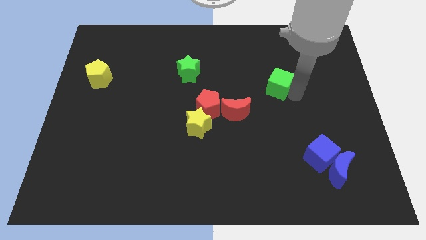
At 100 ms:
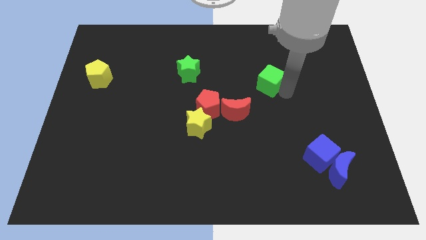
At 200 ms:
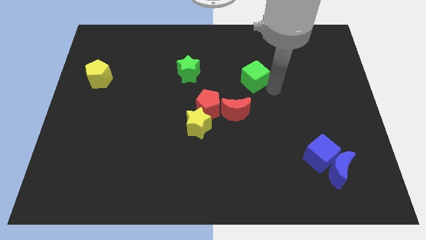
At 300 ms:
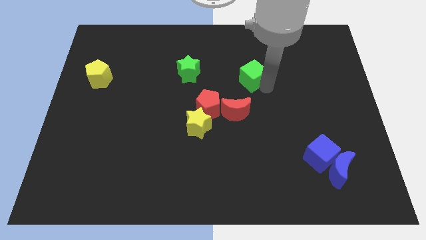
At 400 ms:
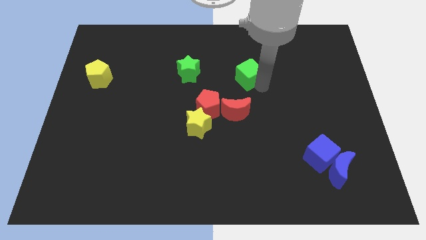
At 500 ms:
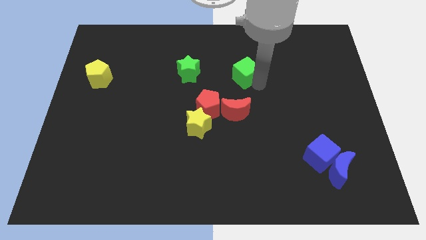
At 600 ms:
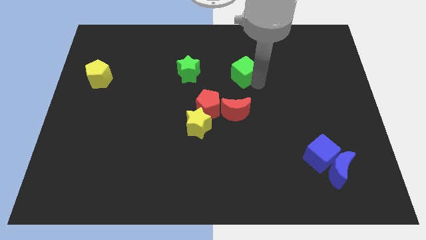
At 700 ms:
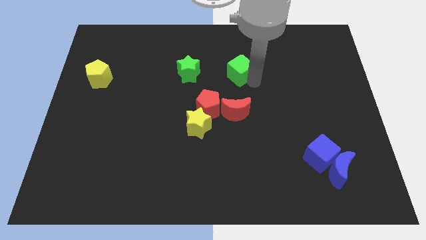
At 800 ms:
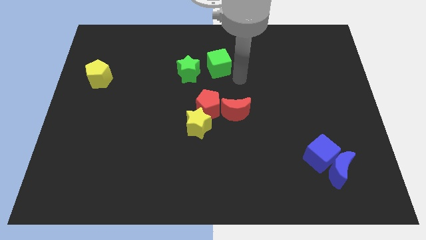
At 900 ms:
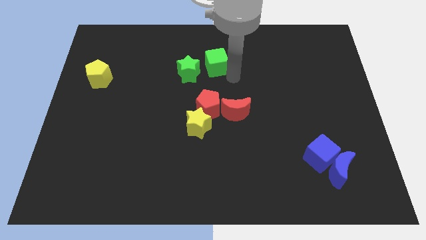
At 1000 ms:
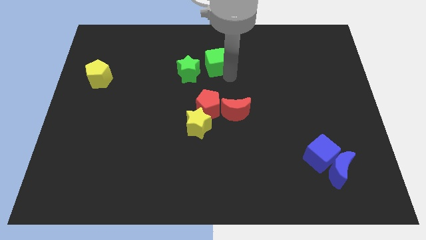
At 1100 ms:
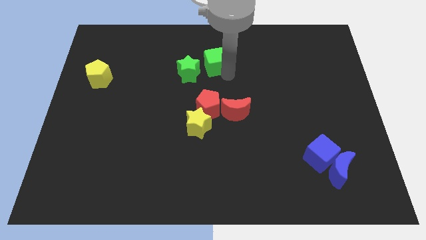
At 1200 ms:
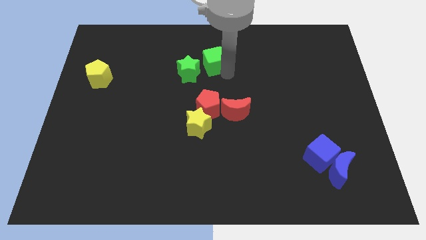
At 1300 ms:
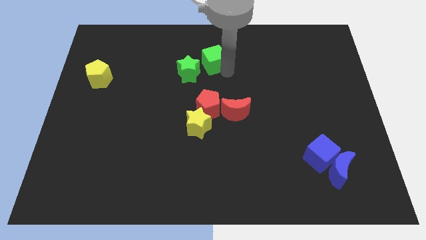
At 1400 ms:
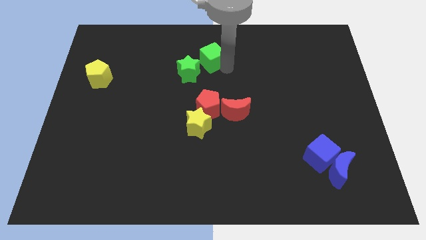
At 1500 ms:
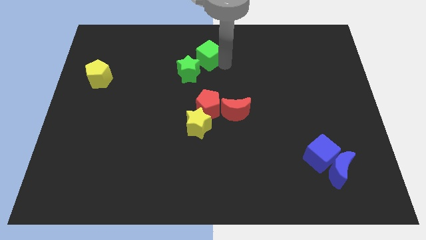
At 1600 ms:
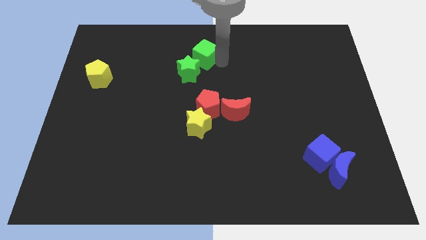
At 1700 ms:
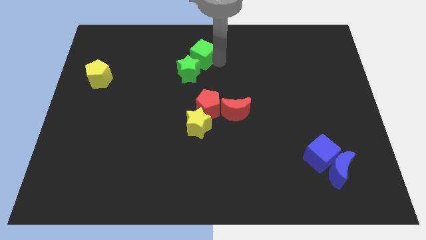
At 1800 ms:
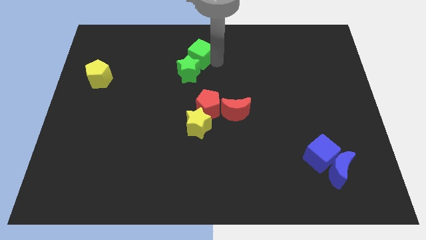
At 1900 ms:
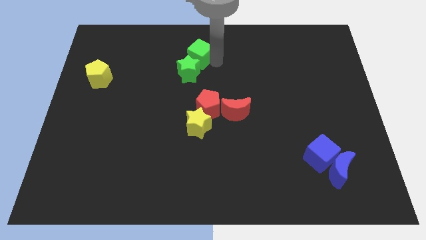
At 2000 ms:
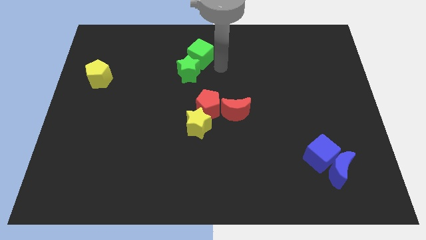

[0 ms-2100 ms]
place the green cube to the top of green star

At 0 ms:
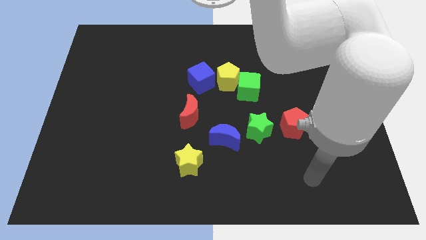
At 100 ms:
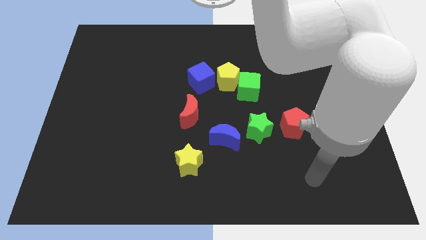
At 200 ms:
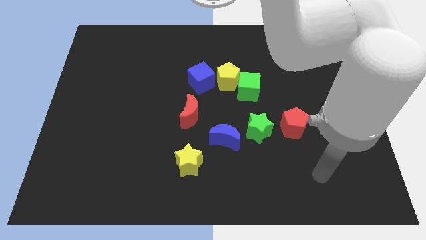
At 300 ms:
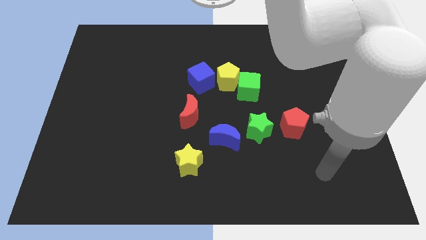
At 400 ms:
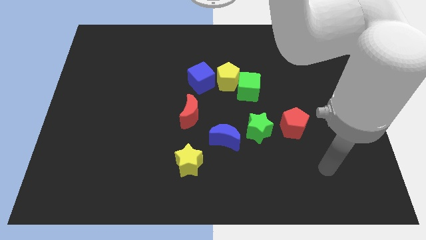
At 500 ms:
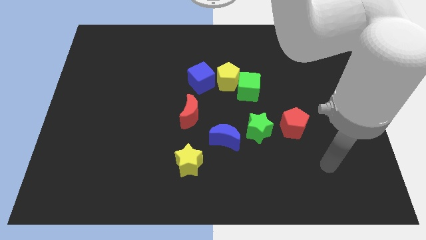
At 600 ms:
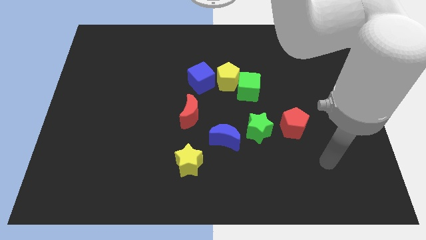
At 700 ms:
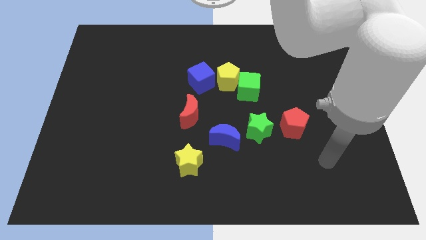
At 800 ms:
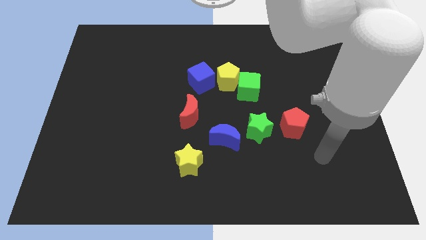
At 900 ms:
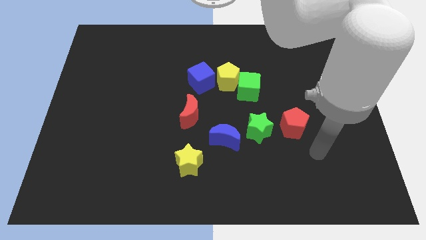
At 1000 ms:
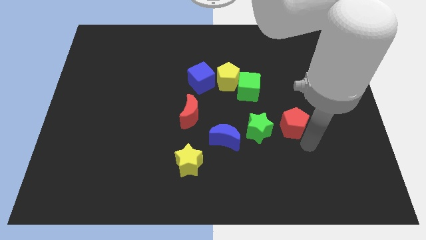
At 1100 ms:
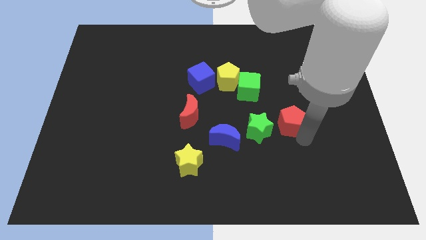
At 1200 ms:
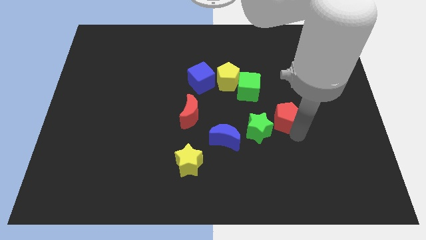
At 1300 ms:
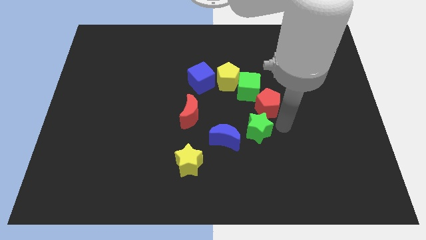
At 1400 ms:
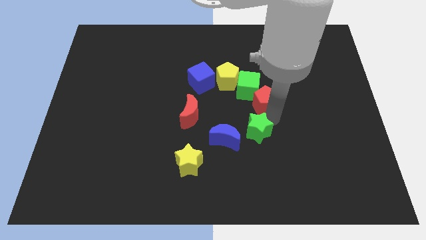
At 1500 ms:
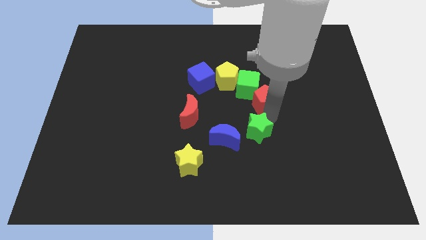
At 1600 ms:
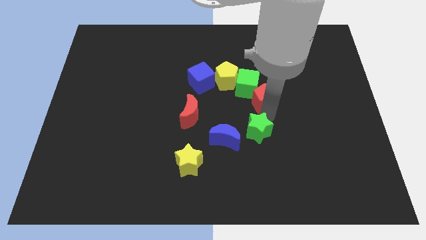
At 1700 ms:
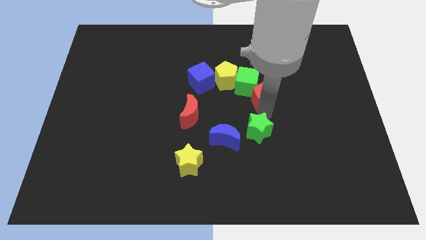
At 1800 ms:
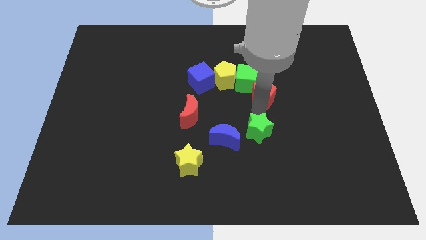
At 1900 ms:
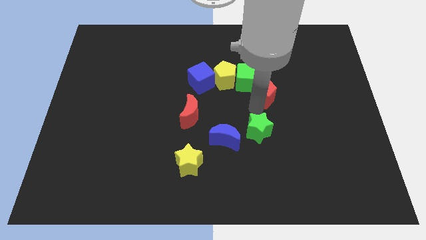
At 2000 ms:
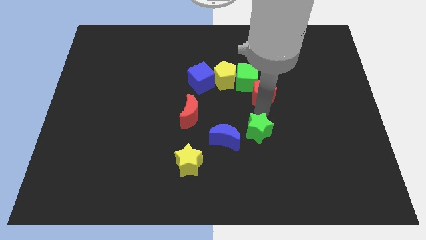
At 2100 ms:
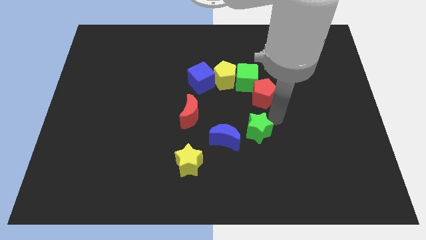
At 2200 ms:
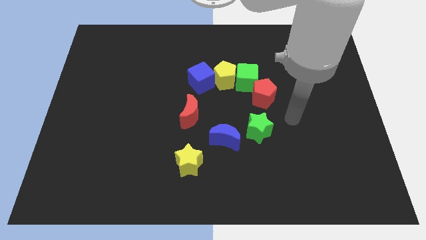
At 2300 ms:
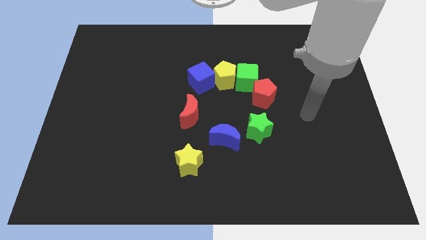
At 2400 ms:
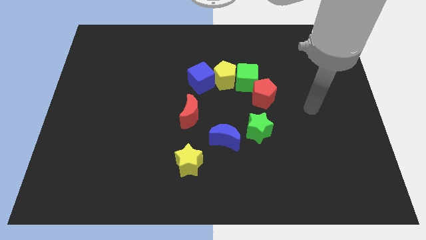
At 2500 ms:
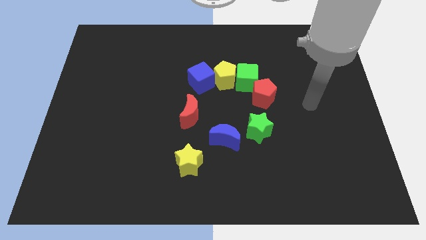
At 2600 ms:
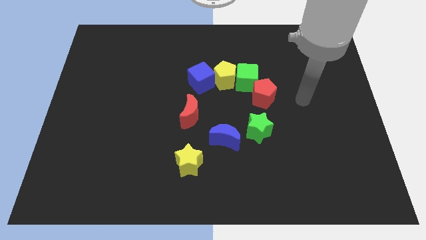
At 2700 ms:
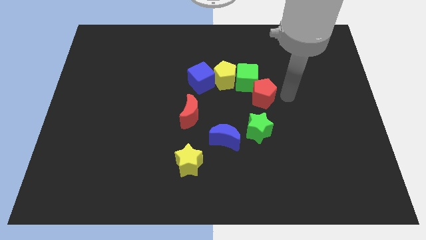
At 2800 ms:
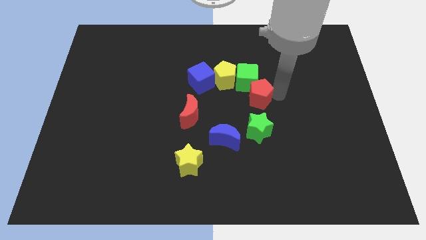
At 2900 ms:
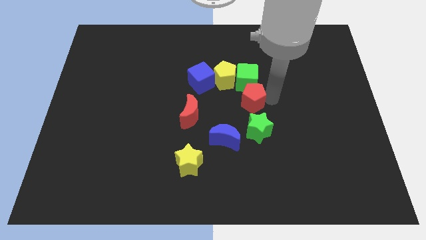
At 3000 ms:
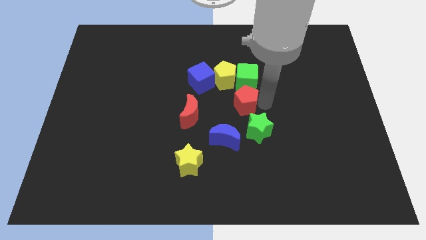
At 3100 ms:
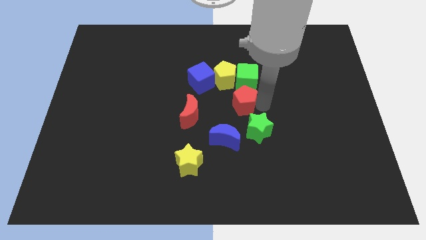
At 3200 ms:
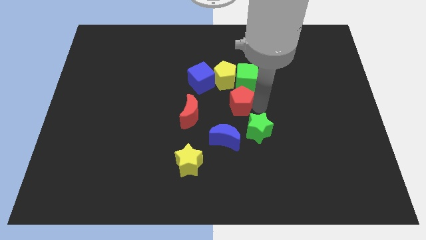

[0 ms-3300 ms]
place the red pentagon at the bottom of the green cube

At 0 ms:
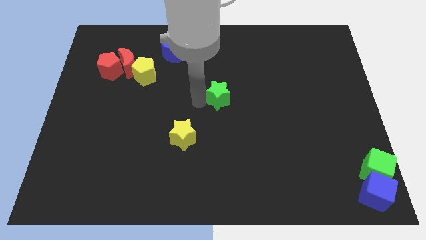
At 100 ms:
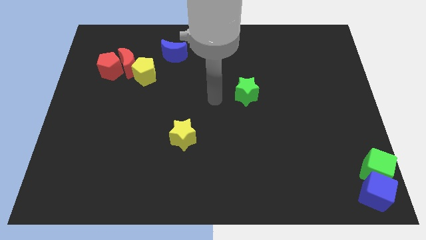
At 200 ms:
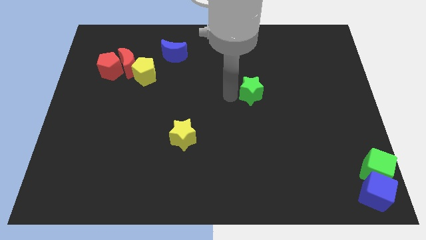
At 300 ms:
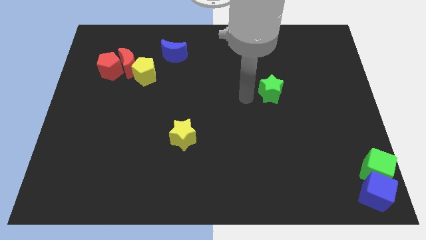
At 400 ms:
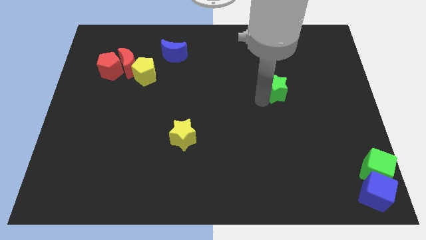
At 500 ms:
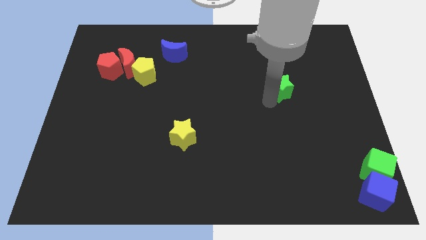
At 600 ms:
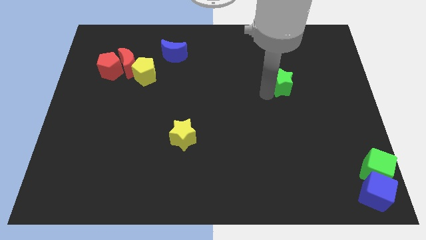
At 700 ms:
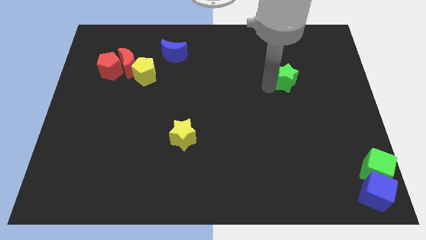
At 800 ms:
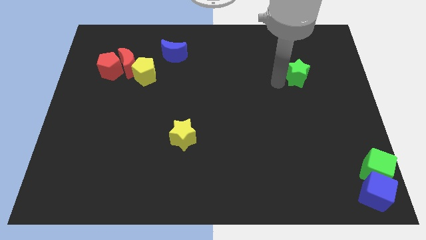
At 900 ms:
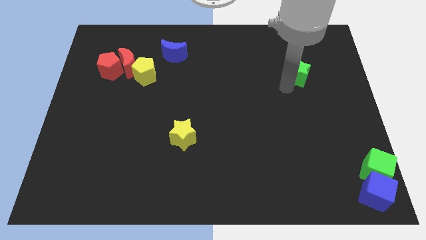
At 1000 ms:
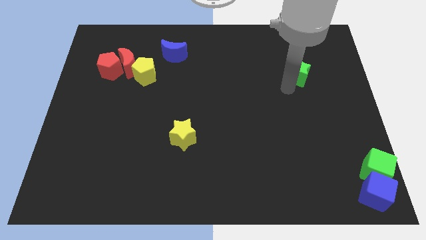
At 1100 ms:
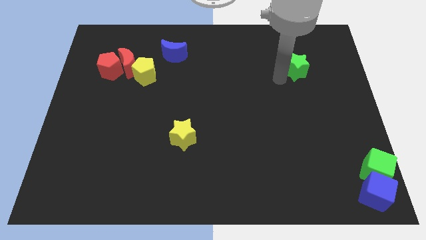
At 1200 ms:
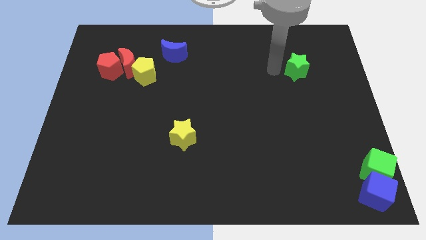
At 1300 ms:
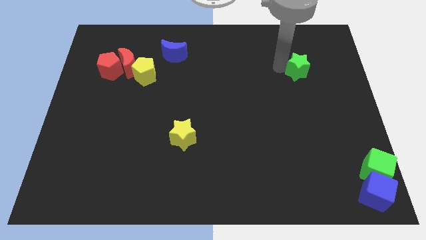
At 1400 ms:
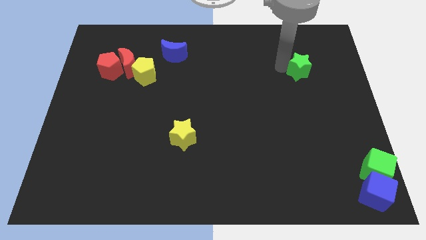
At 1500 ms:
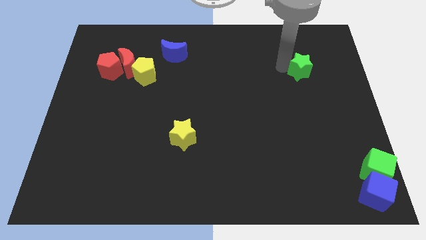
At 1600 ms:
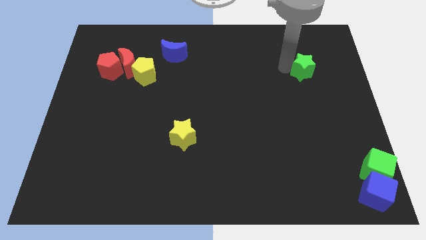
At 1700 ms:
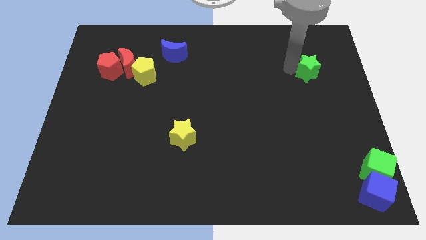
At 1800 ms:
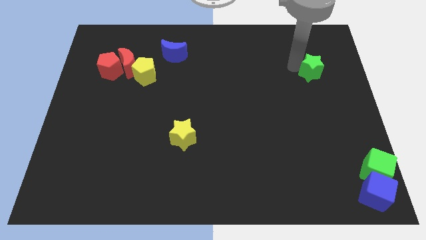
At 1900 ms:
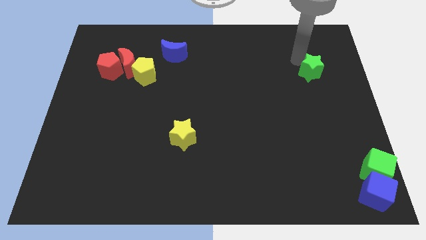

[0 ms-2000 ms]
push the green star towards the top right side of the board

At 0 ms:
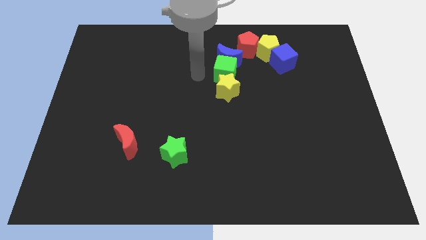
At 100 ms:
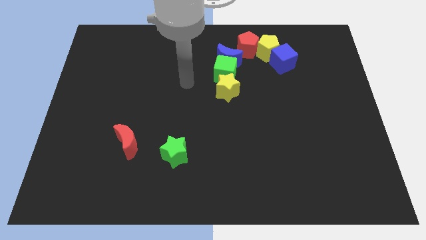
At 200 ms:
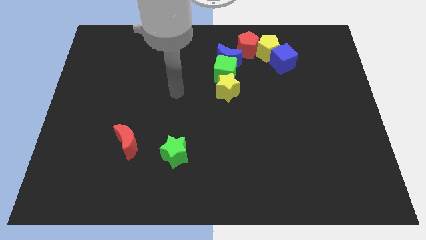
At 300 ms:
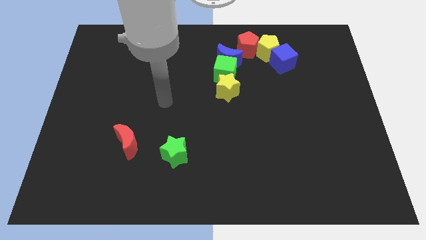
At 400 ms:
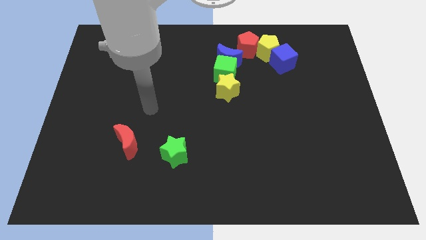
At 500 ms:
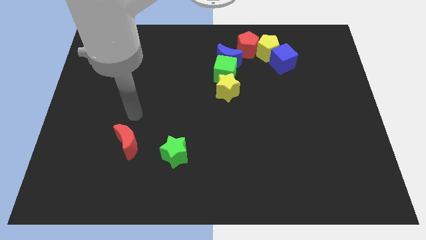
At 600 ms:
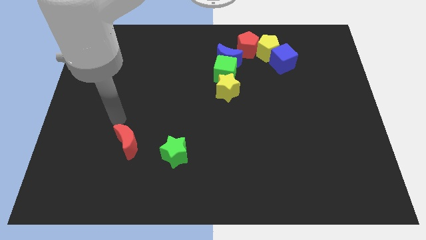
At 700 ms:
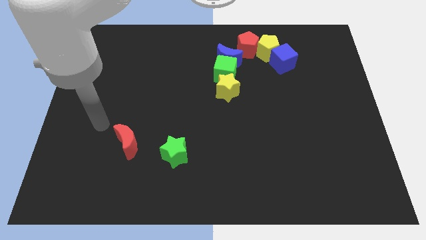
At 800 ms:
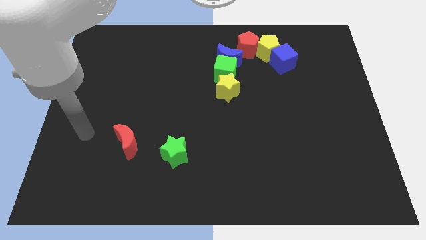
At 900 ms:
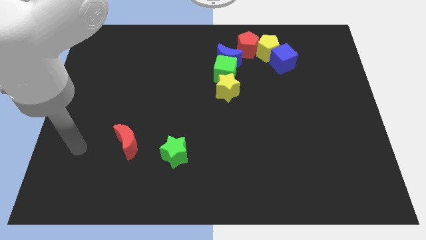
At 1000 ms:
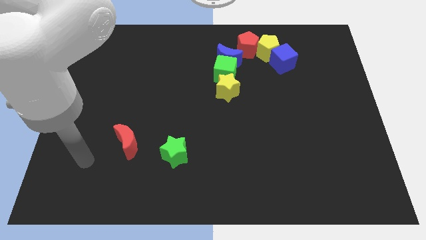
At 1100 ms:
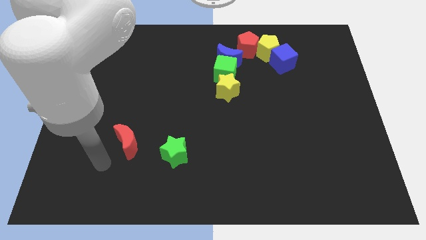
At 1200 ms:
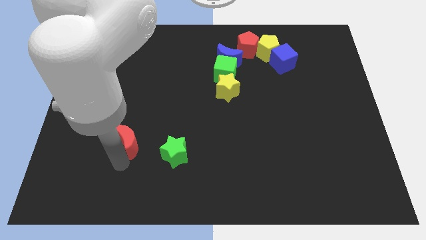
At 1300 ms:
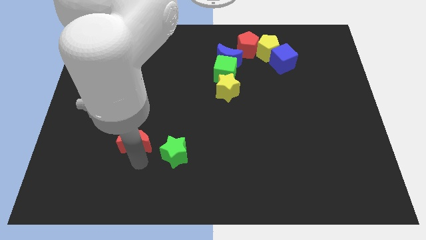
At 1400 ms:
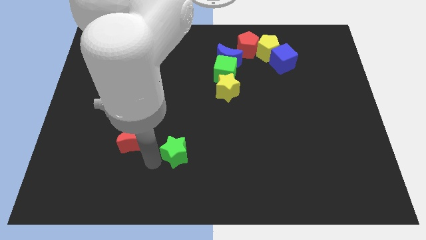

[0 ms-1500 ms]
move the red moon slightly up
